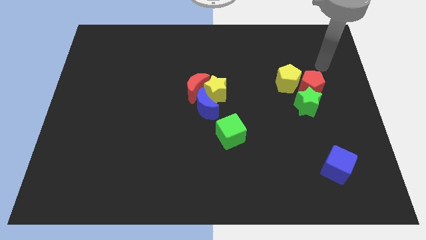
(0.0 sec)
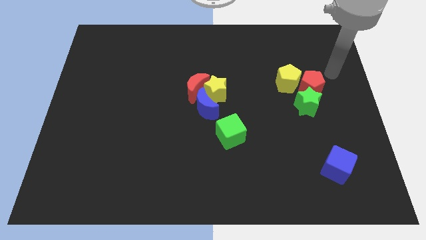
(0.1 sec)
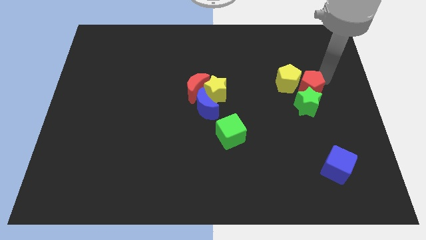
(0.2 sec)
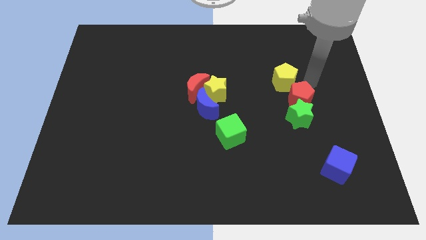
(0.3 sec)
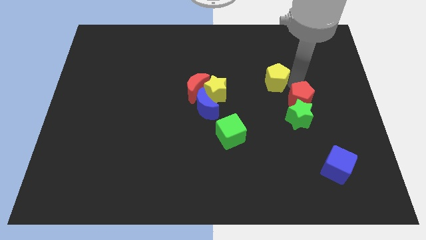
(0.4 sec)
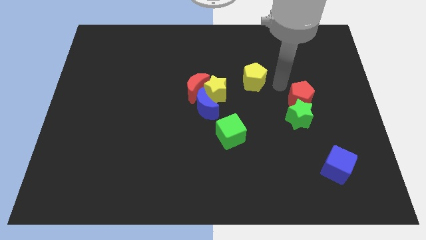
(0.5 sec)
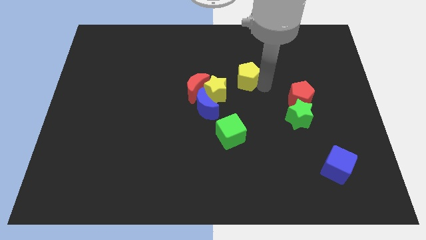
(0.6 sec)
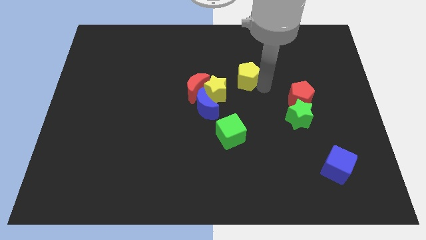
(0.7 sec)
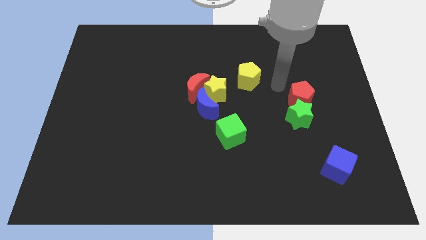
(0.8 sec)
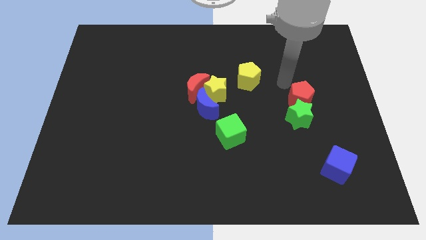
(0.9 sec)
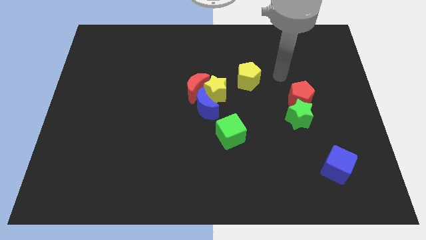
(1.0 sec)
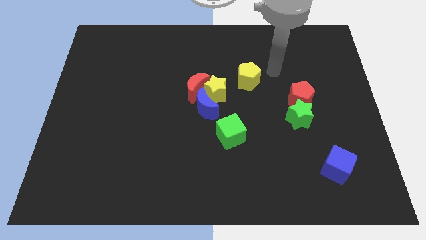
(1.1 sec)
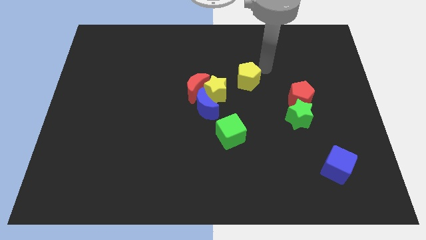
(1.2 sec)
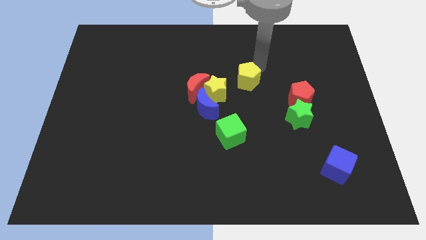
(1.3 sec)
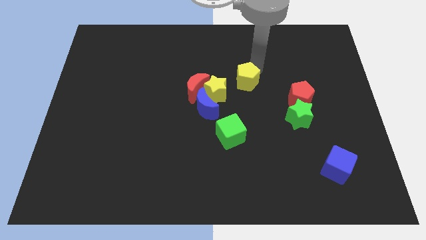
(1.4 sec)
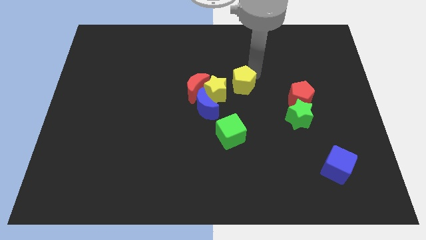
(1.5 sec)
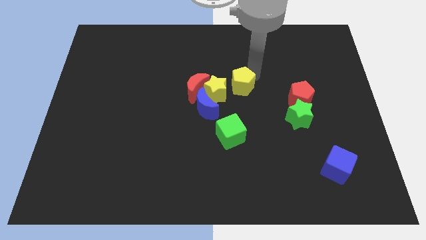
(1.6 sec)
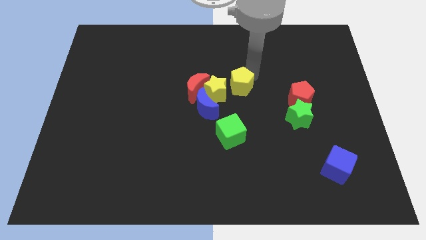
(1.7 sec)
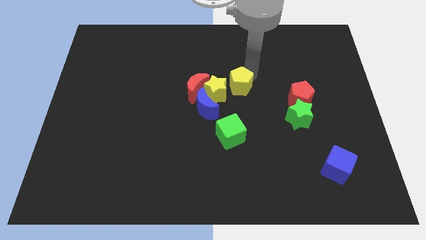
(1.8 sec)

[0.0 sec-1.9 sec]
push the yellow pentagon right to the yellow star

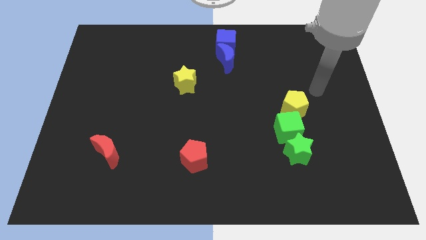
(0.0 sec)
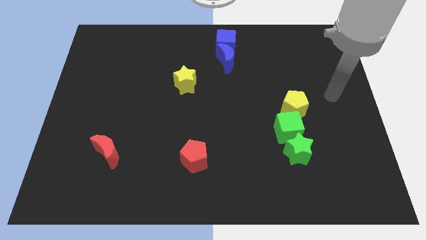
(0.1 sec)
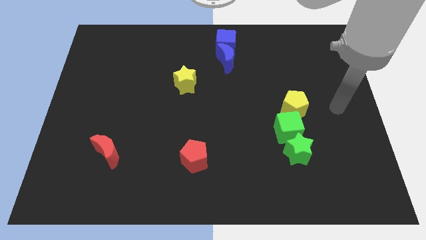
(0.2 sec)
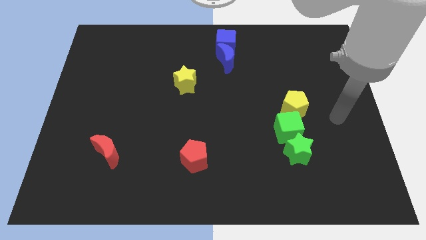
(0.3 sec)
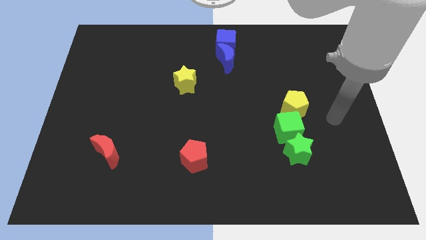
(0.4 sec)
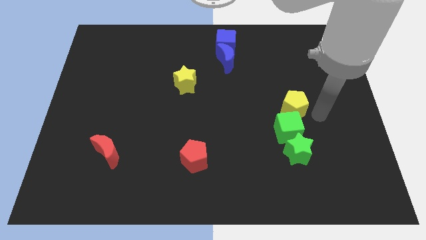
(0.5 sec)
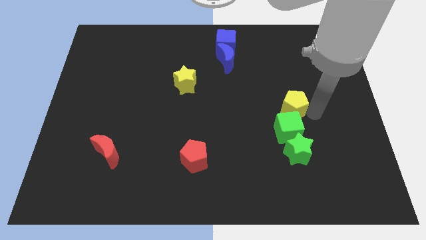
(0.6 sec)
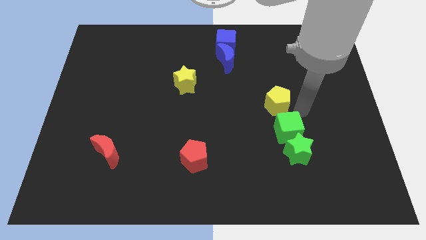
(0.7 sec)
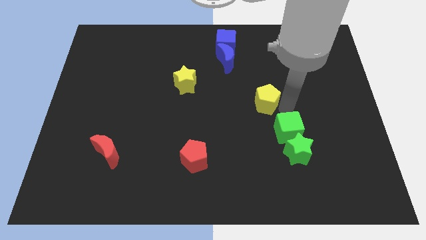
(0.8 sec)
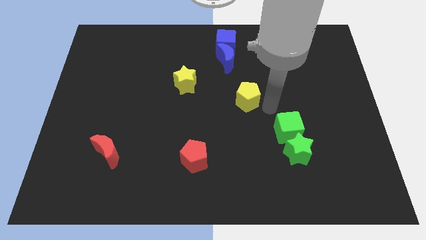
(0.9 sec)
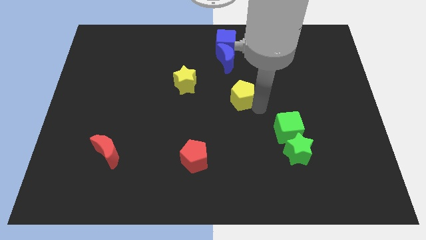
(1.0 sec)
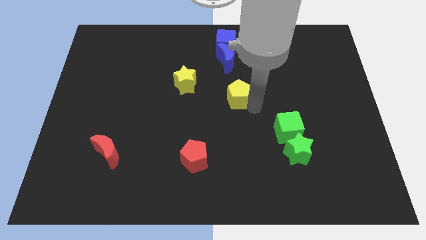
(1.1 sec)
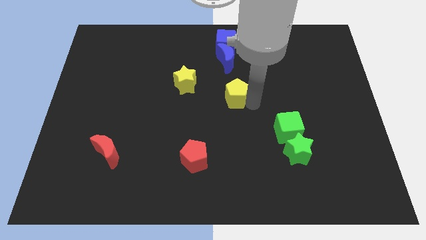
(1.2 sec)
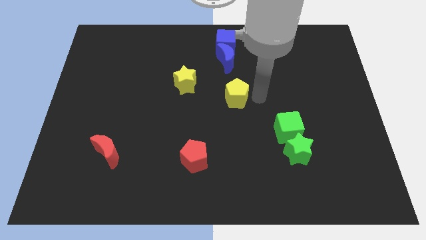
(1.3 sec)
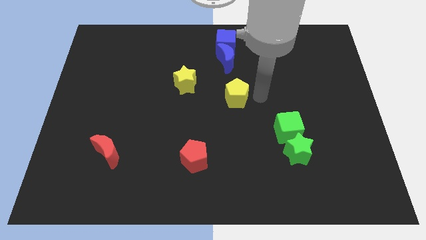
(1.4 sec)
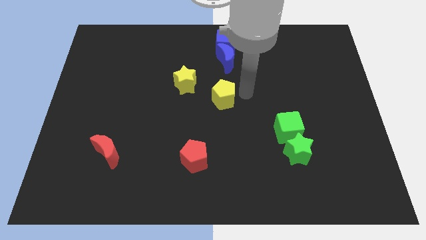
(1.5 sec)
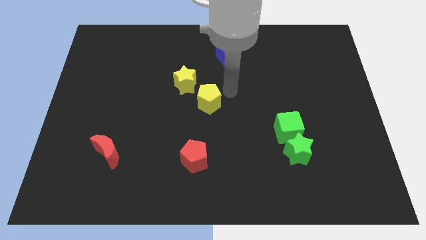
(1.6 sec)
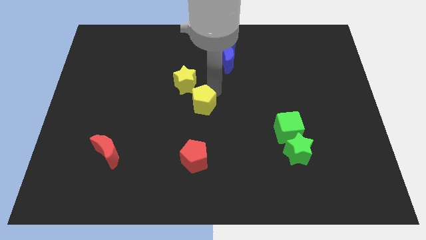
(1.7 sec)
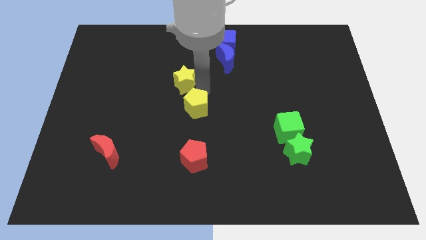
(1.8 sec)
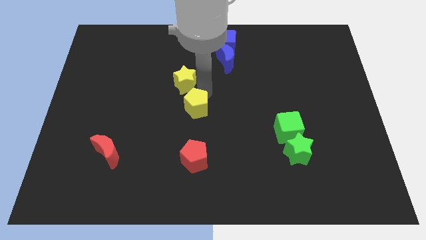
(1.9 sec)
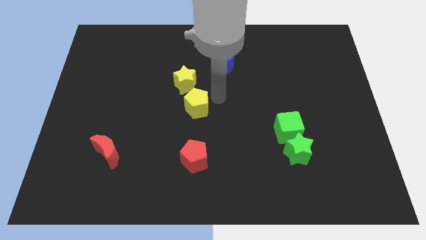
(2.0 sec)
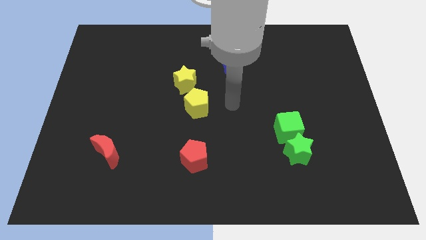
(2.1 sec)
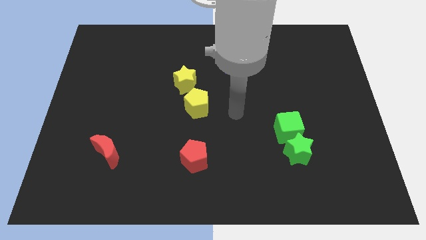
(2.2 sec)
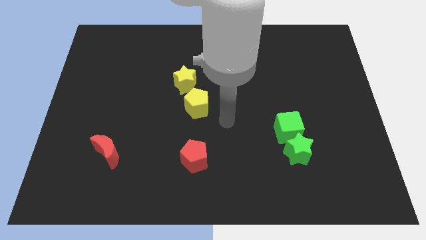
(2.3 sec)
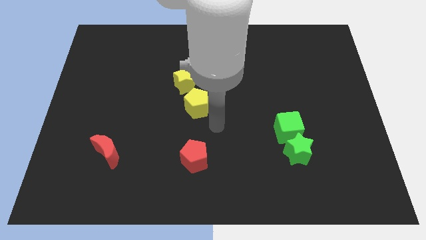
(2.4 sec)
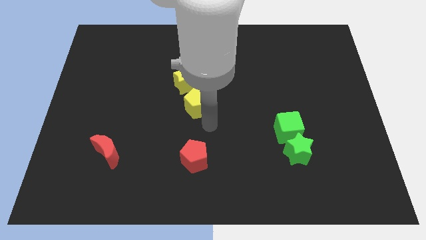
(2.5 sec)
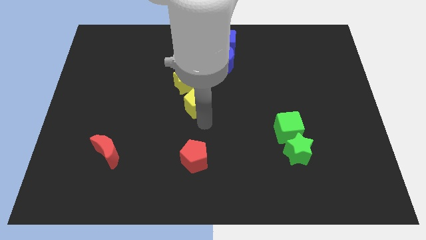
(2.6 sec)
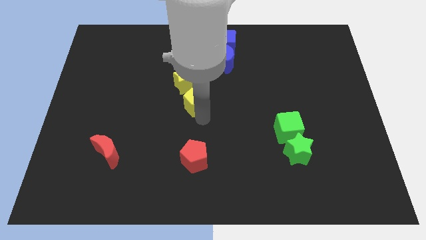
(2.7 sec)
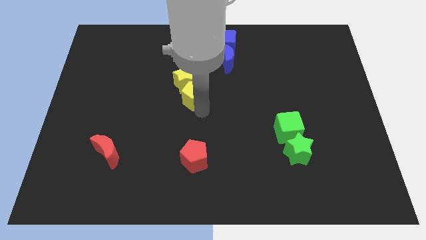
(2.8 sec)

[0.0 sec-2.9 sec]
group up the yellow blocks vertically above the red pentagon

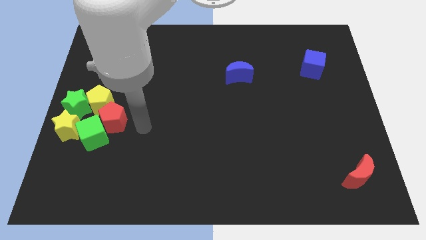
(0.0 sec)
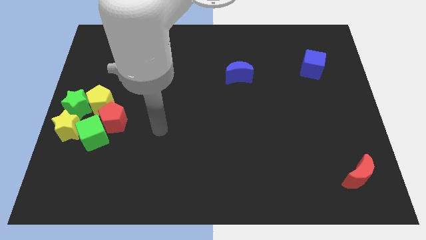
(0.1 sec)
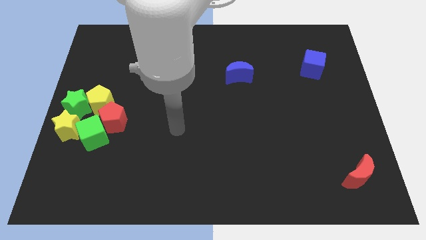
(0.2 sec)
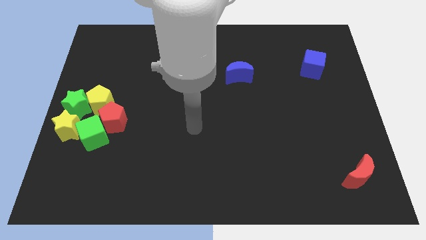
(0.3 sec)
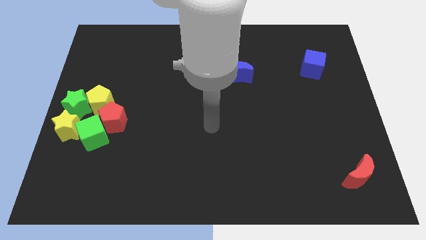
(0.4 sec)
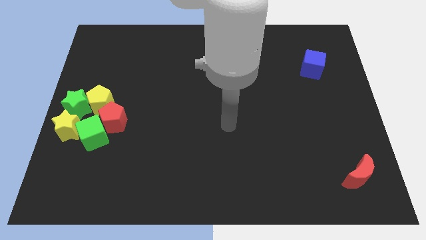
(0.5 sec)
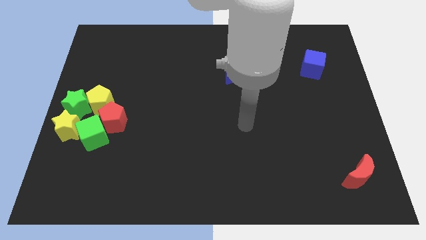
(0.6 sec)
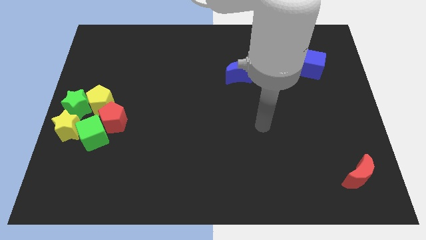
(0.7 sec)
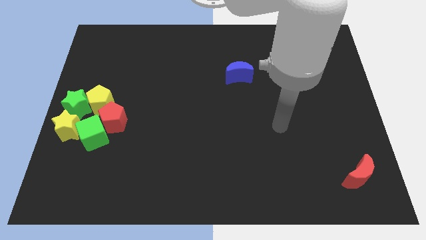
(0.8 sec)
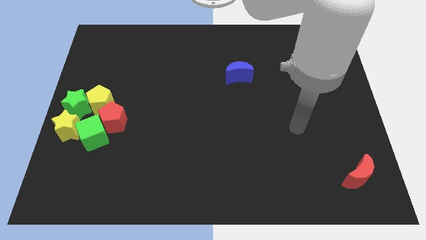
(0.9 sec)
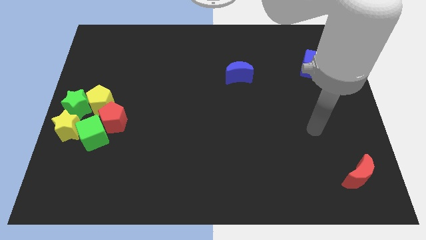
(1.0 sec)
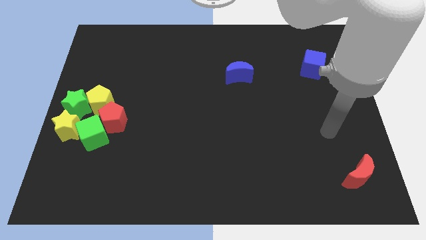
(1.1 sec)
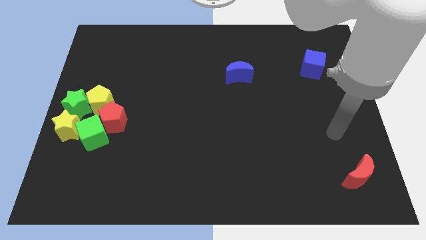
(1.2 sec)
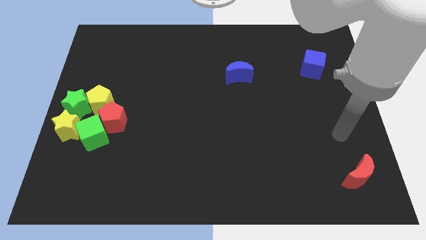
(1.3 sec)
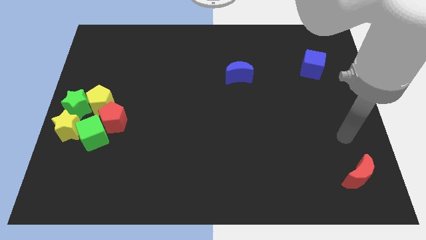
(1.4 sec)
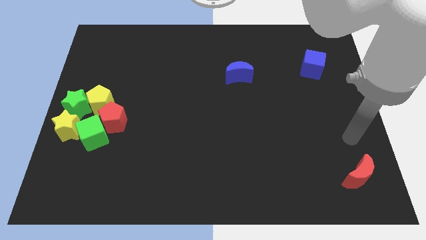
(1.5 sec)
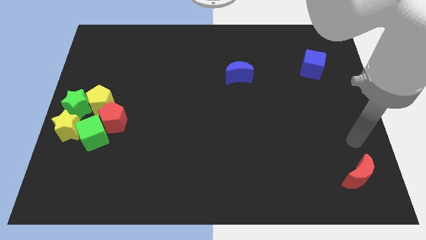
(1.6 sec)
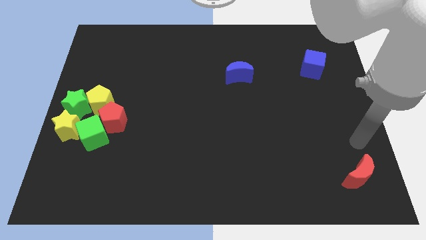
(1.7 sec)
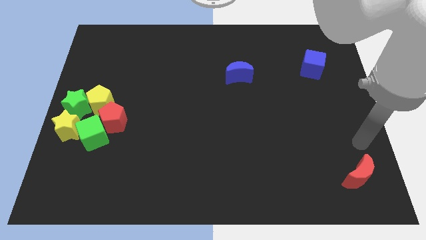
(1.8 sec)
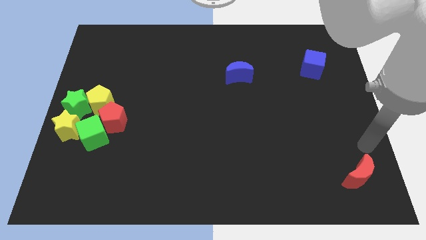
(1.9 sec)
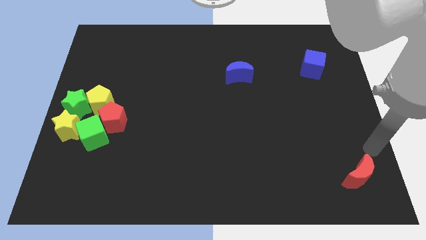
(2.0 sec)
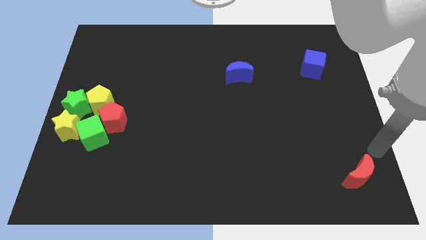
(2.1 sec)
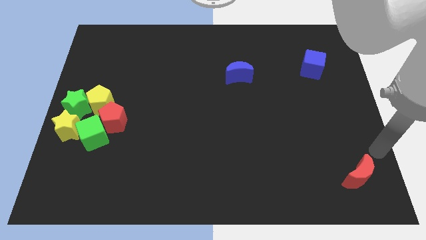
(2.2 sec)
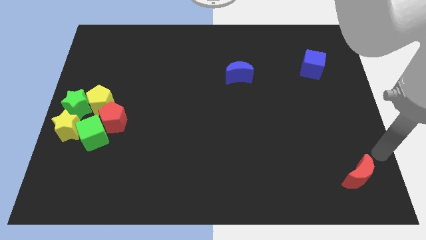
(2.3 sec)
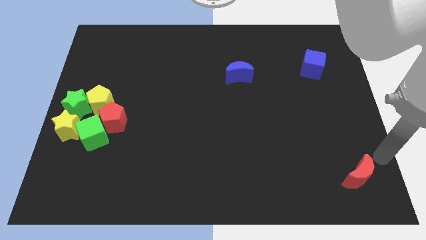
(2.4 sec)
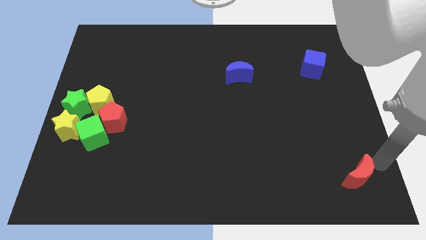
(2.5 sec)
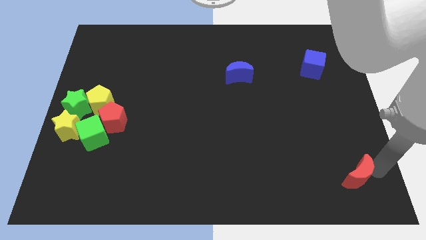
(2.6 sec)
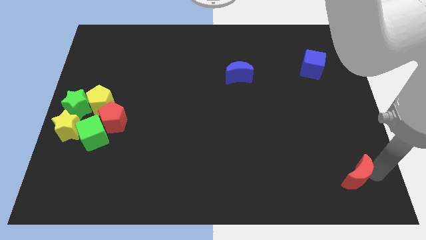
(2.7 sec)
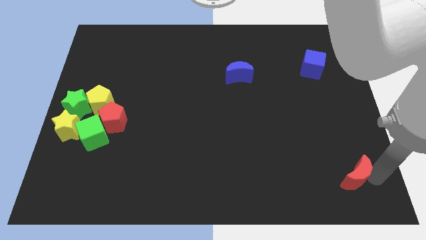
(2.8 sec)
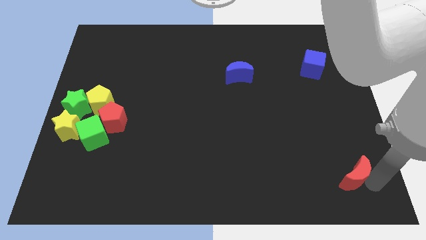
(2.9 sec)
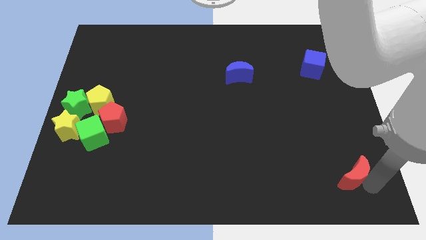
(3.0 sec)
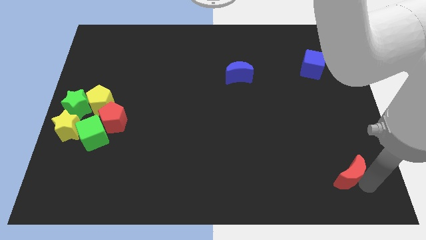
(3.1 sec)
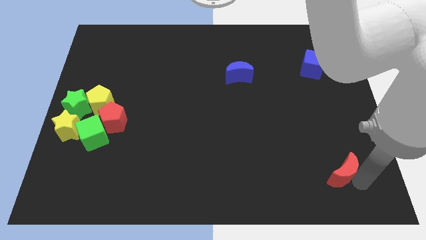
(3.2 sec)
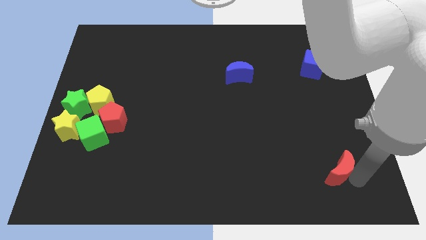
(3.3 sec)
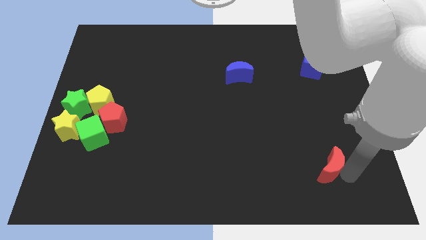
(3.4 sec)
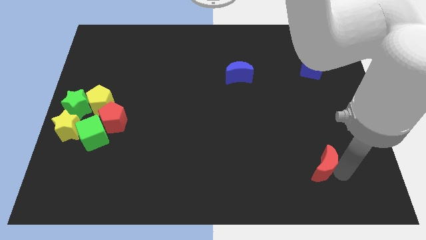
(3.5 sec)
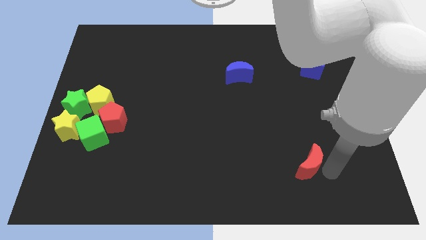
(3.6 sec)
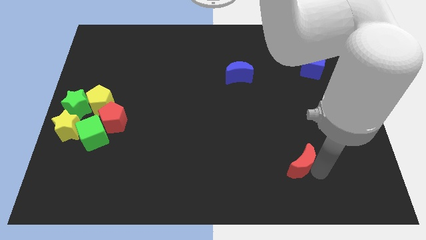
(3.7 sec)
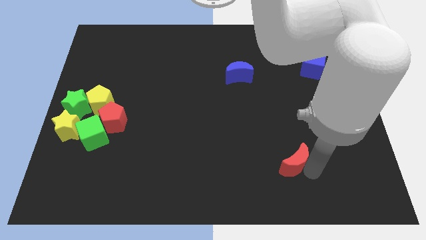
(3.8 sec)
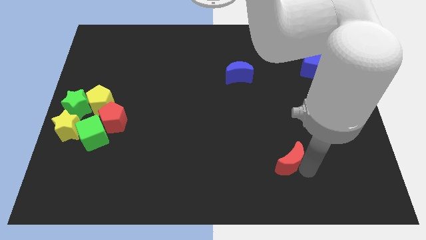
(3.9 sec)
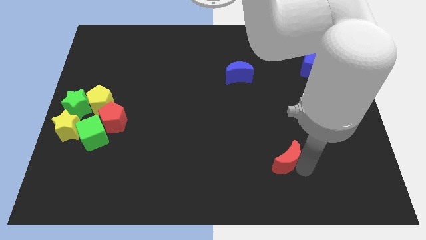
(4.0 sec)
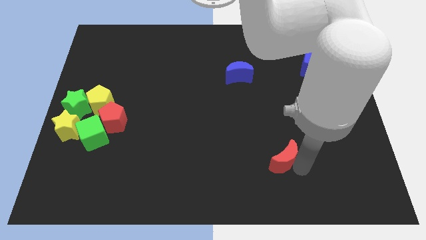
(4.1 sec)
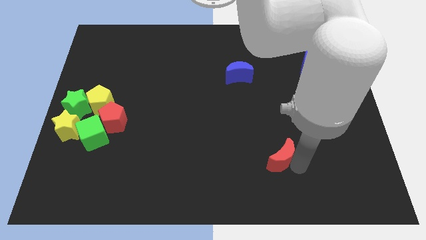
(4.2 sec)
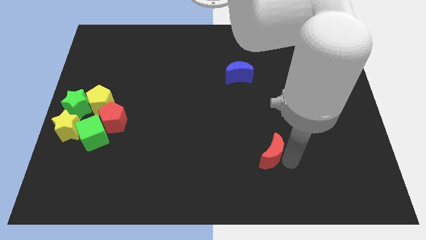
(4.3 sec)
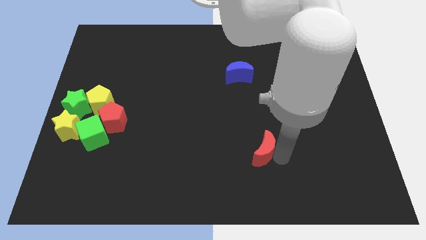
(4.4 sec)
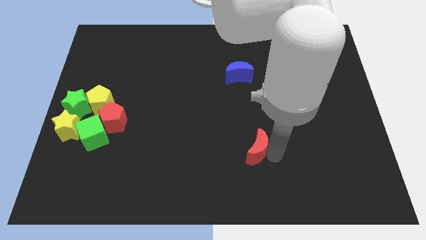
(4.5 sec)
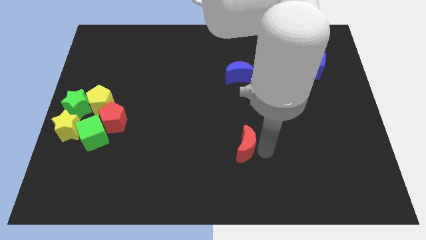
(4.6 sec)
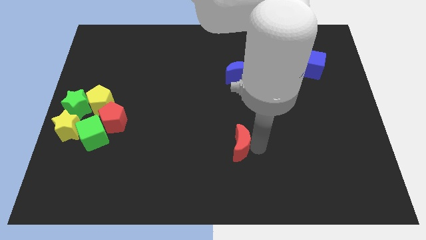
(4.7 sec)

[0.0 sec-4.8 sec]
push the red crescent to the bottom of the blue crescent
